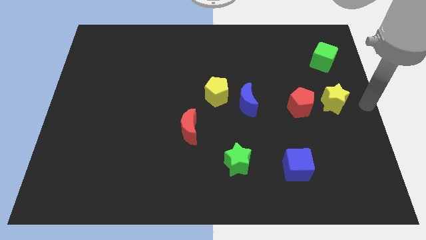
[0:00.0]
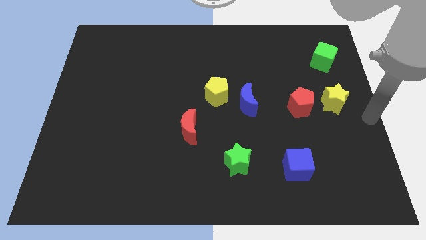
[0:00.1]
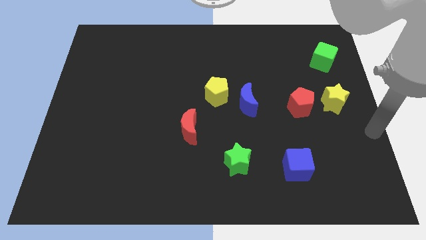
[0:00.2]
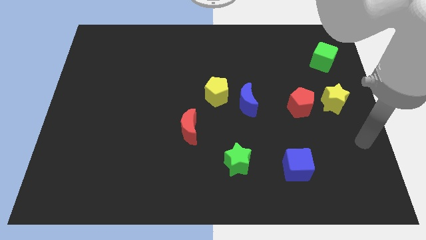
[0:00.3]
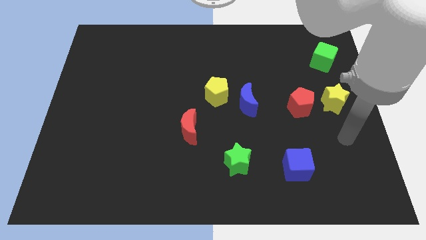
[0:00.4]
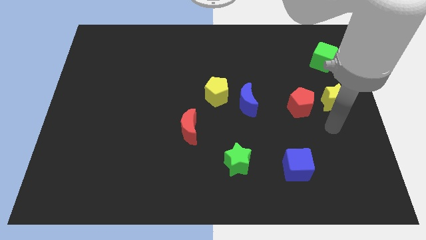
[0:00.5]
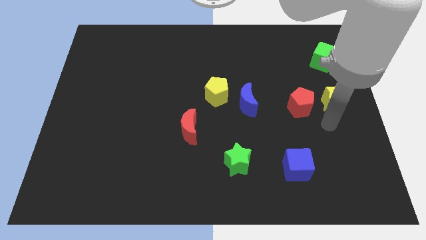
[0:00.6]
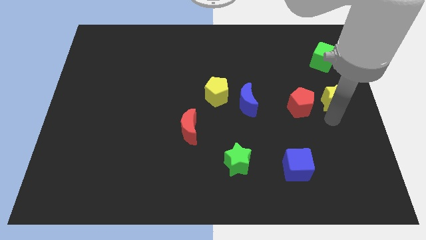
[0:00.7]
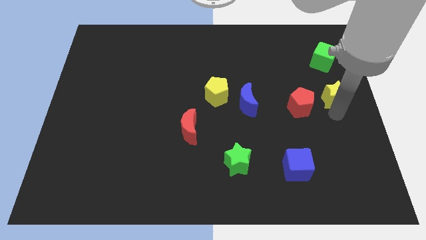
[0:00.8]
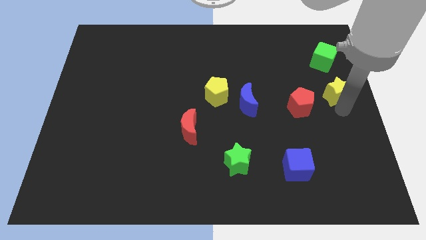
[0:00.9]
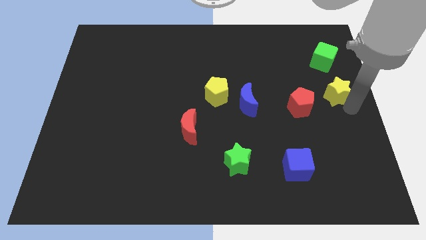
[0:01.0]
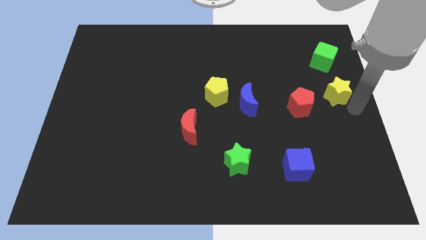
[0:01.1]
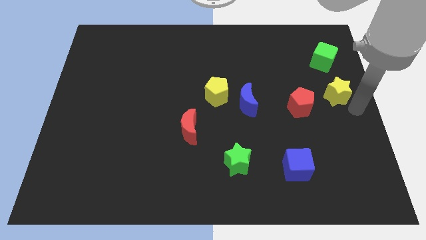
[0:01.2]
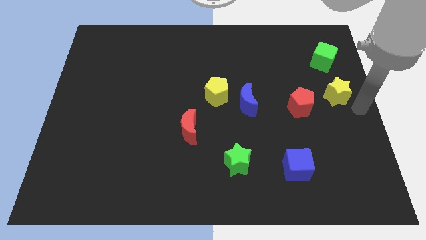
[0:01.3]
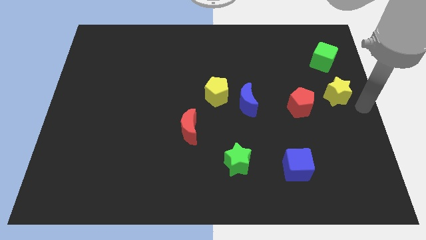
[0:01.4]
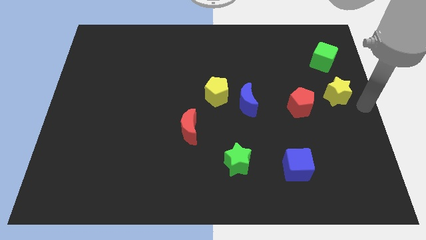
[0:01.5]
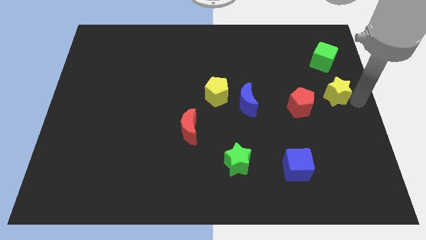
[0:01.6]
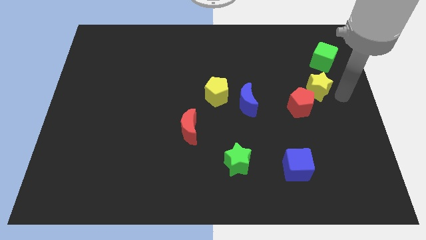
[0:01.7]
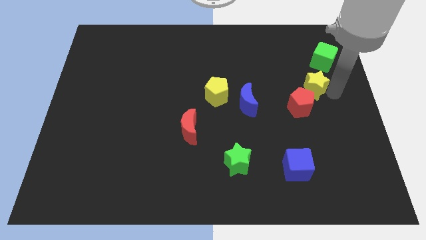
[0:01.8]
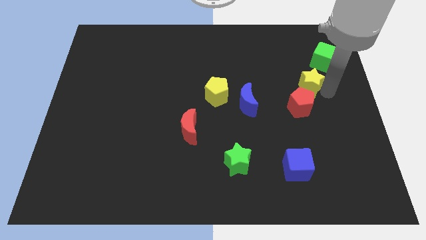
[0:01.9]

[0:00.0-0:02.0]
place the yellow star in between the green cube and the red pentagon

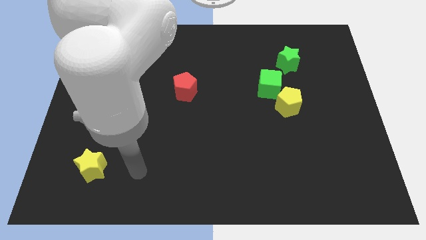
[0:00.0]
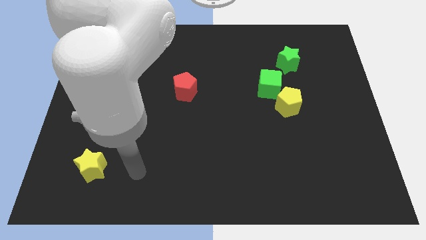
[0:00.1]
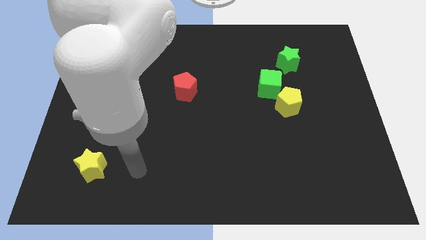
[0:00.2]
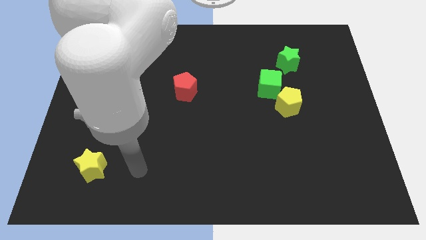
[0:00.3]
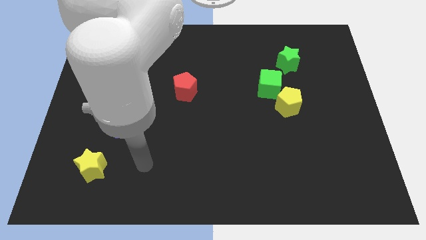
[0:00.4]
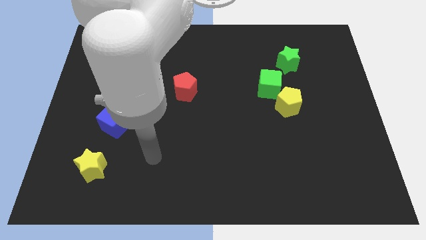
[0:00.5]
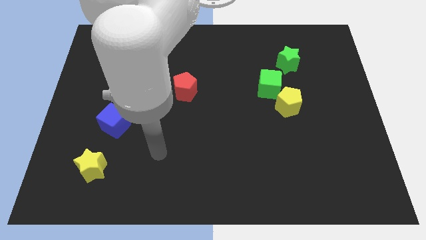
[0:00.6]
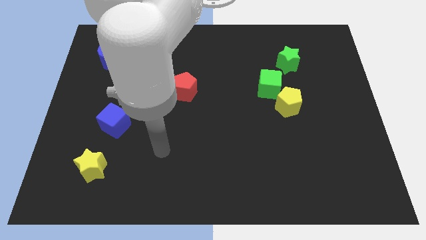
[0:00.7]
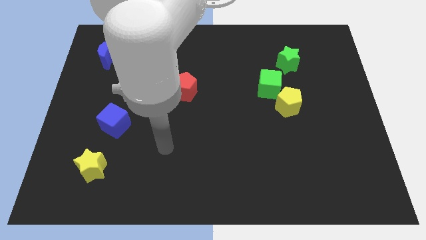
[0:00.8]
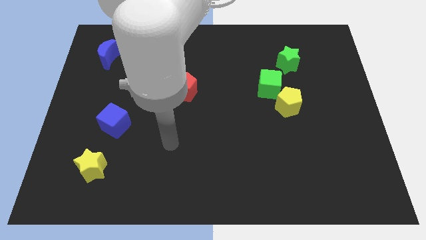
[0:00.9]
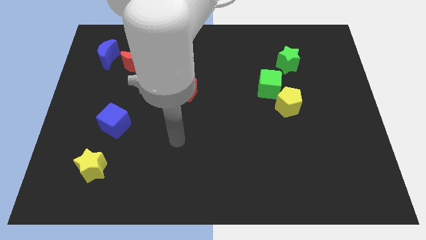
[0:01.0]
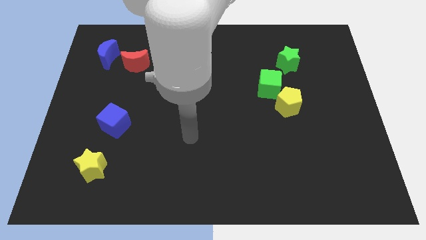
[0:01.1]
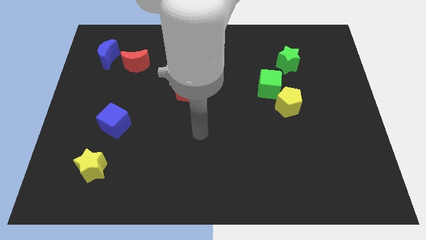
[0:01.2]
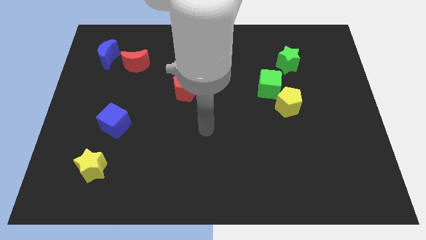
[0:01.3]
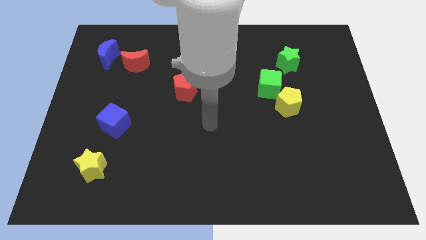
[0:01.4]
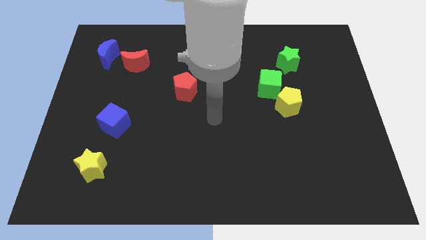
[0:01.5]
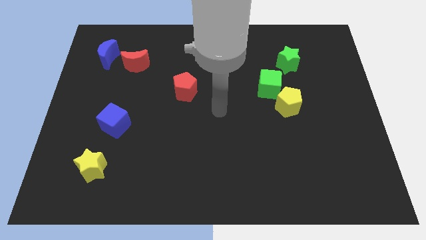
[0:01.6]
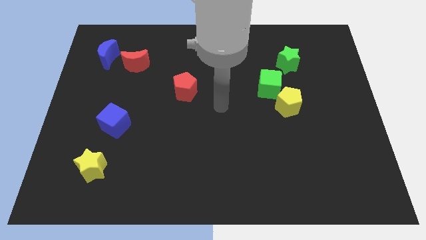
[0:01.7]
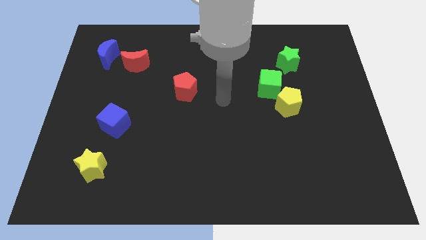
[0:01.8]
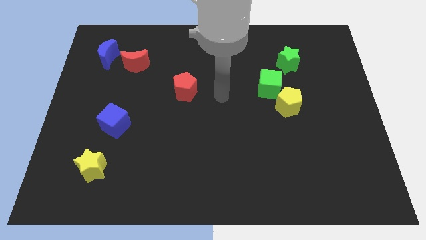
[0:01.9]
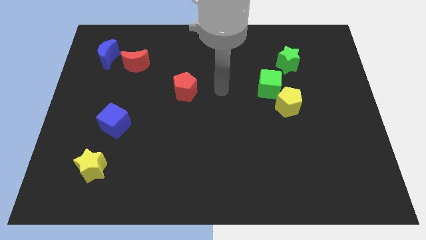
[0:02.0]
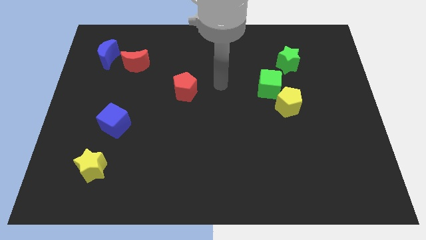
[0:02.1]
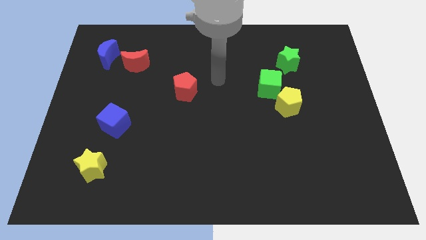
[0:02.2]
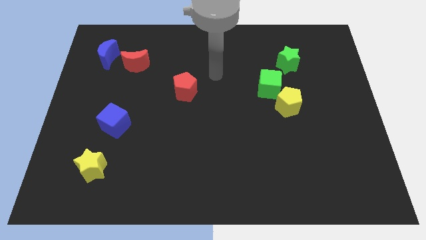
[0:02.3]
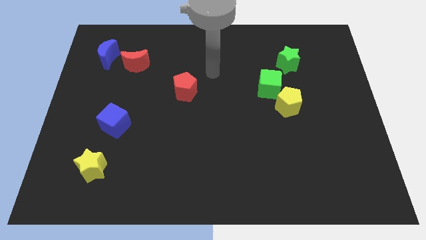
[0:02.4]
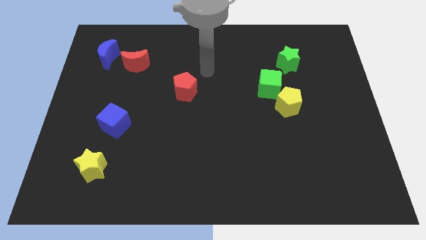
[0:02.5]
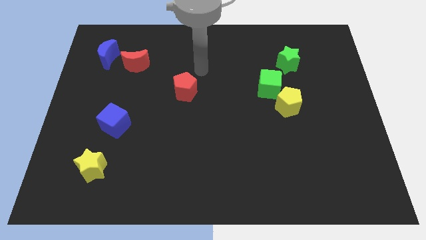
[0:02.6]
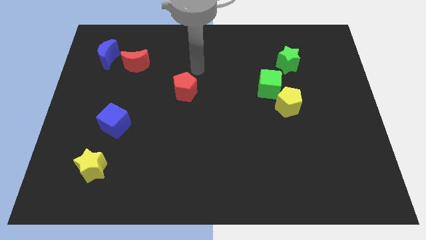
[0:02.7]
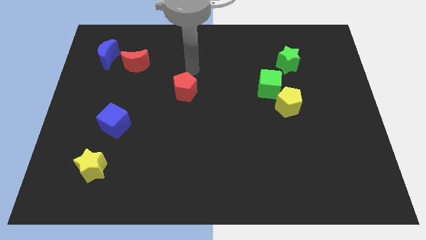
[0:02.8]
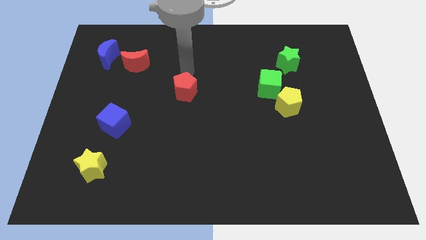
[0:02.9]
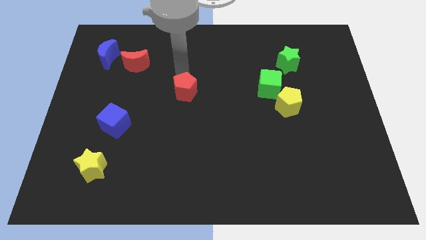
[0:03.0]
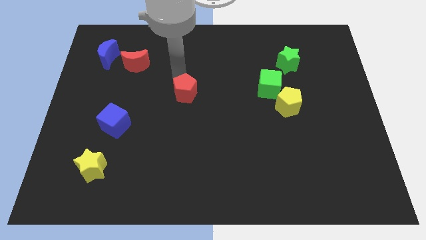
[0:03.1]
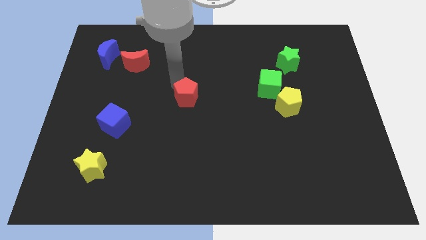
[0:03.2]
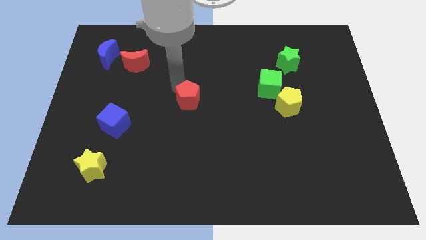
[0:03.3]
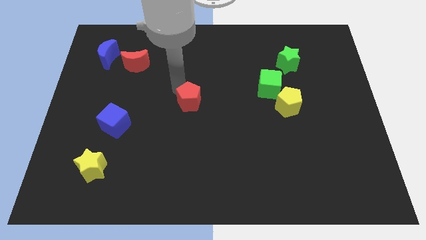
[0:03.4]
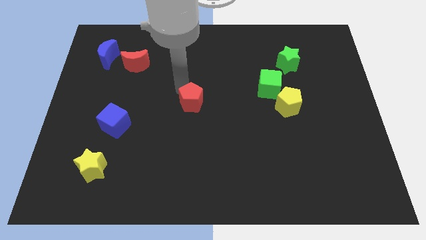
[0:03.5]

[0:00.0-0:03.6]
move the red pentagon slightly down

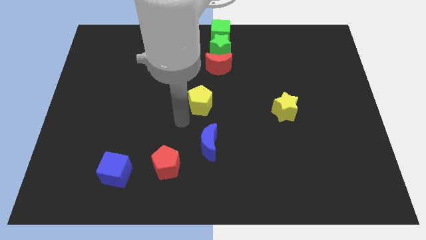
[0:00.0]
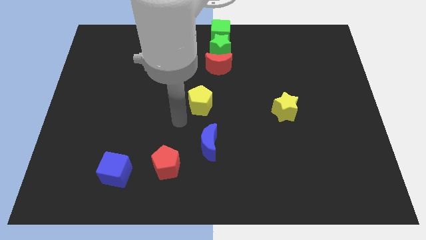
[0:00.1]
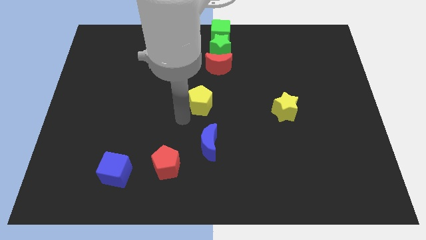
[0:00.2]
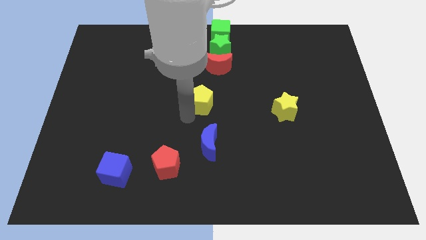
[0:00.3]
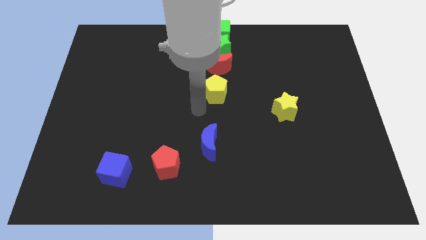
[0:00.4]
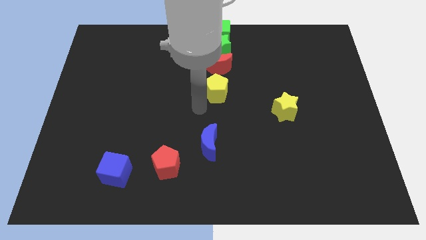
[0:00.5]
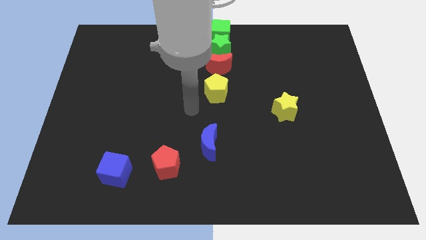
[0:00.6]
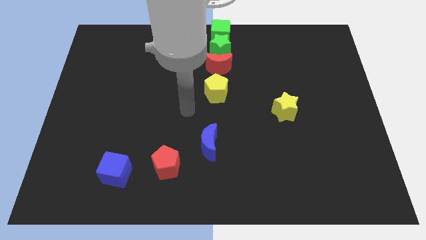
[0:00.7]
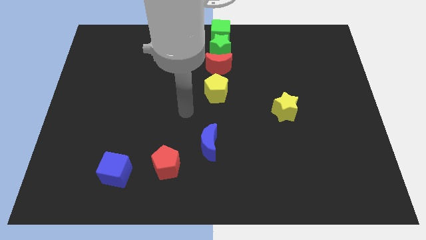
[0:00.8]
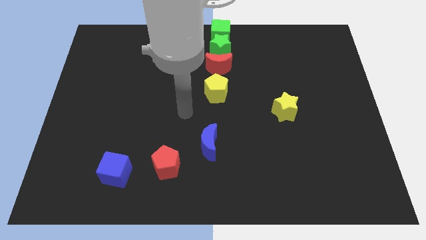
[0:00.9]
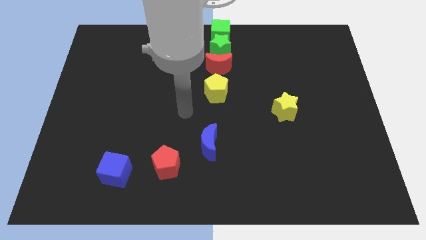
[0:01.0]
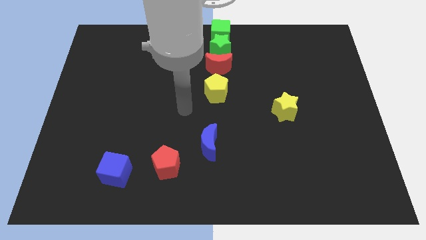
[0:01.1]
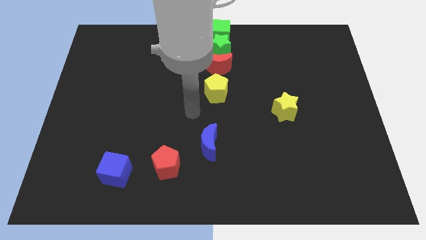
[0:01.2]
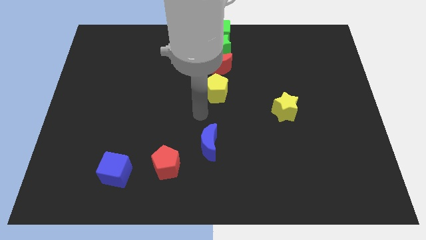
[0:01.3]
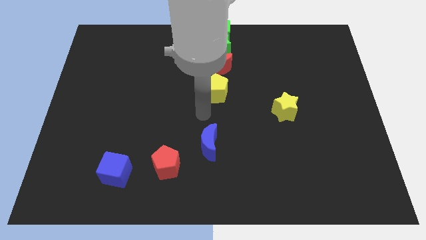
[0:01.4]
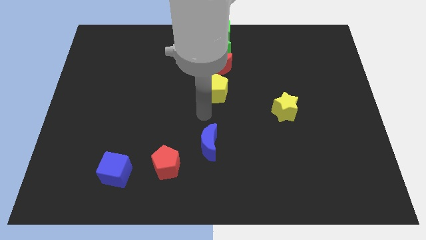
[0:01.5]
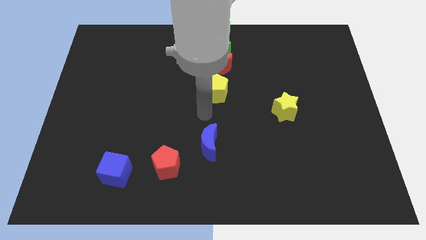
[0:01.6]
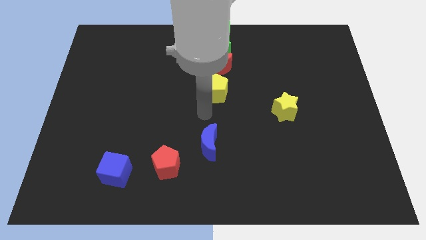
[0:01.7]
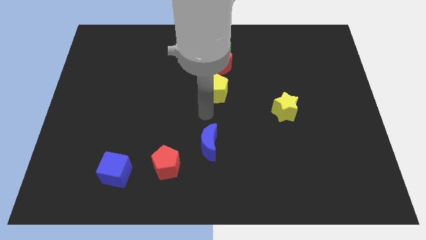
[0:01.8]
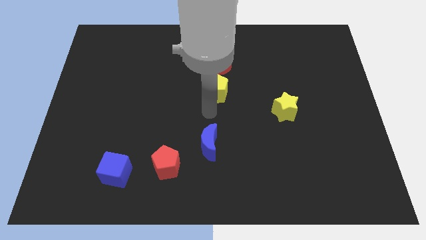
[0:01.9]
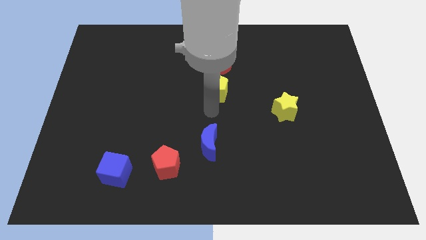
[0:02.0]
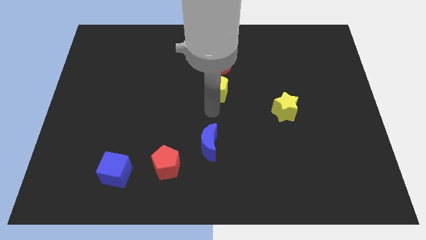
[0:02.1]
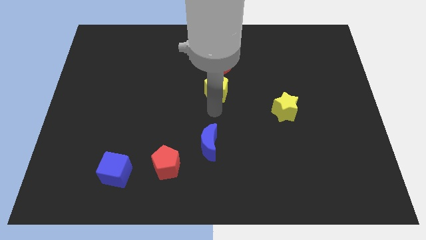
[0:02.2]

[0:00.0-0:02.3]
place the yellow pentagon below the red crescent

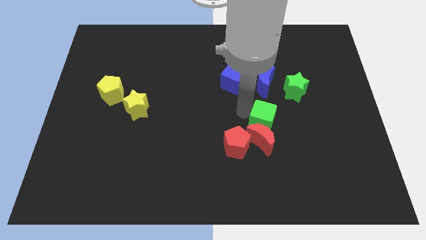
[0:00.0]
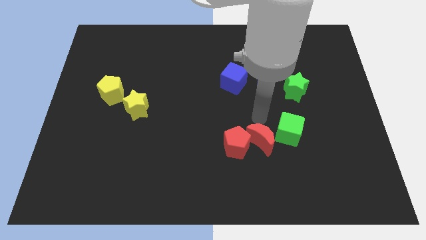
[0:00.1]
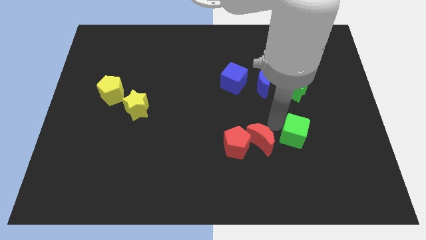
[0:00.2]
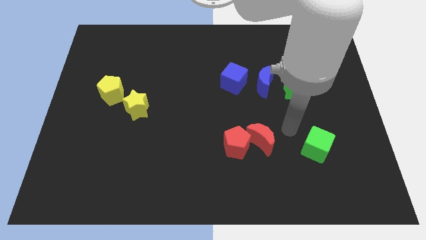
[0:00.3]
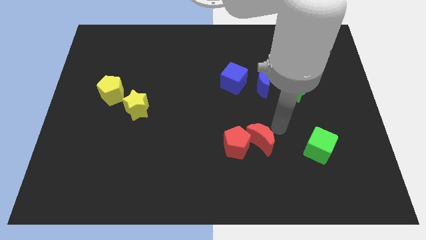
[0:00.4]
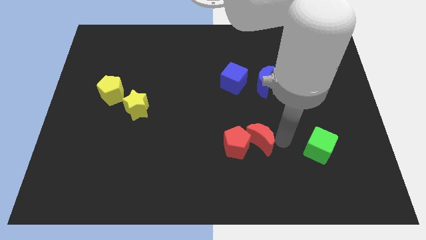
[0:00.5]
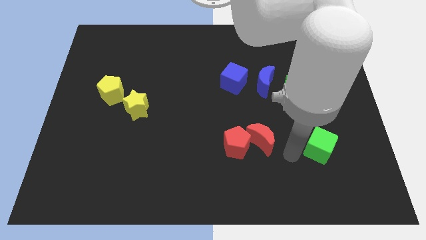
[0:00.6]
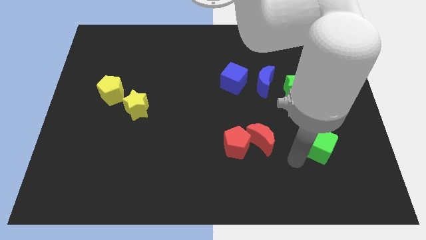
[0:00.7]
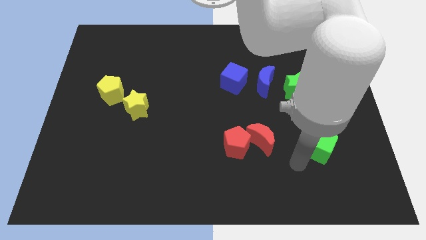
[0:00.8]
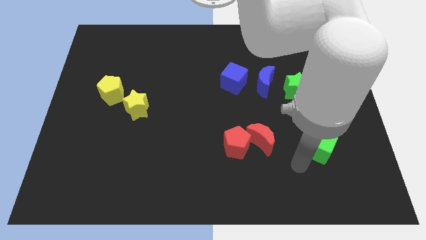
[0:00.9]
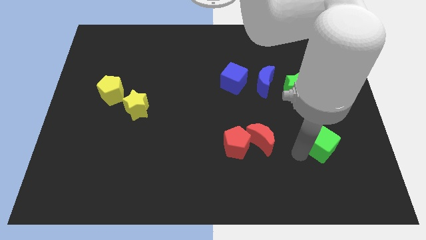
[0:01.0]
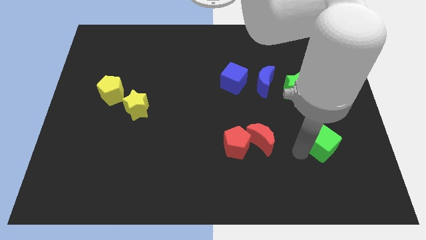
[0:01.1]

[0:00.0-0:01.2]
push the green cube parallel right to the red moon
